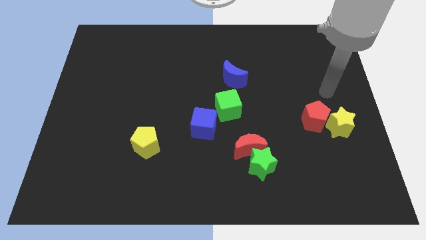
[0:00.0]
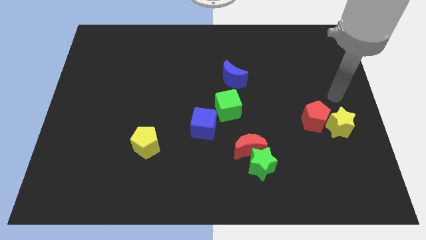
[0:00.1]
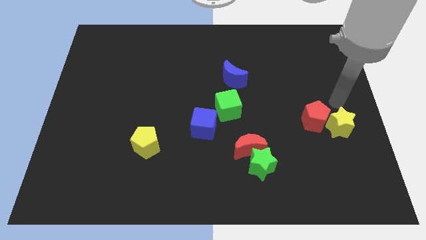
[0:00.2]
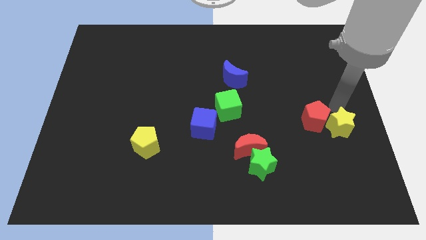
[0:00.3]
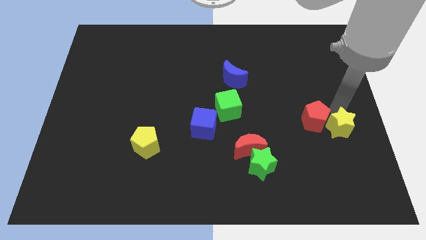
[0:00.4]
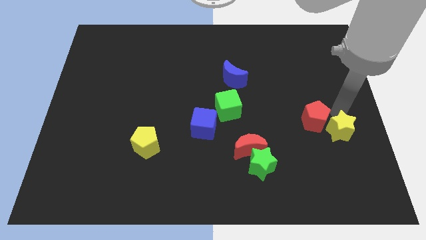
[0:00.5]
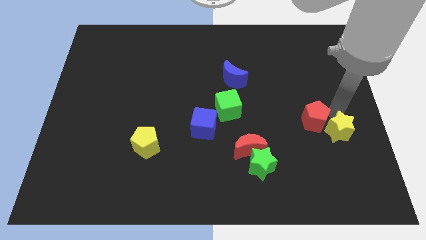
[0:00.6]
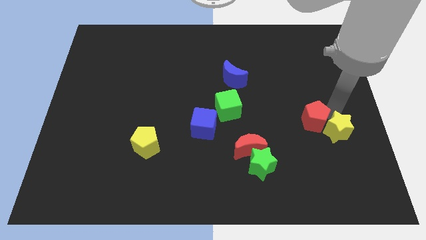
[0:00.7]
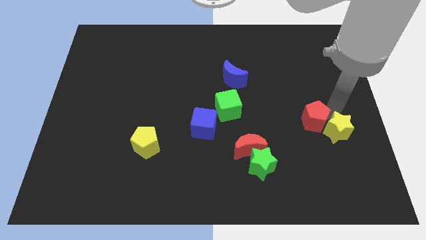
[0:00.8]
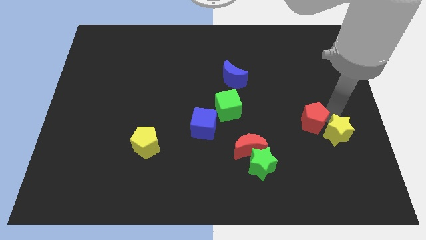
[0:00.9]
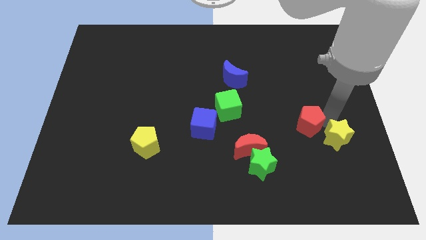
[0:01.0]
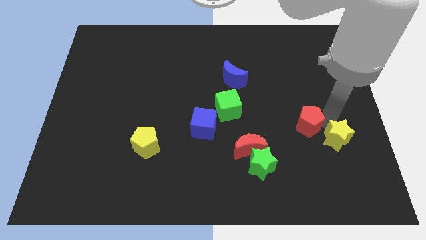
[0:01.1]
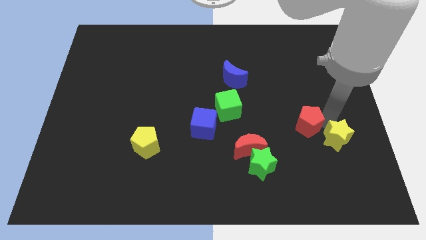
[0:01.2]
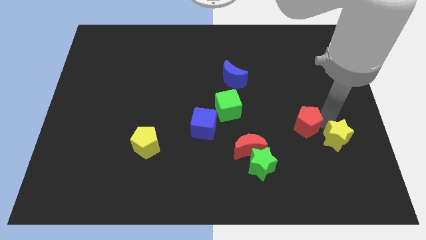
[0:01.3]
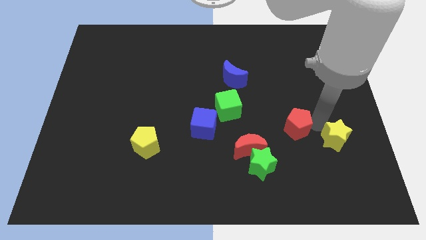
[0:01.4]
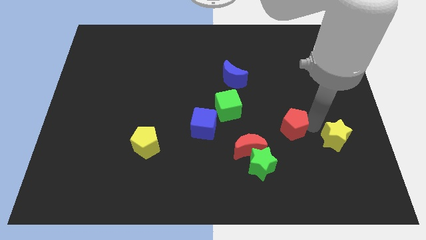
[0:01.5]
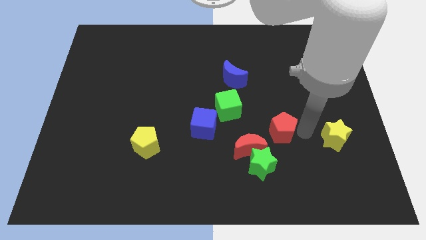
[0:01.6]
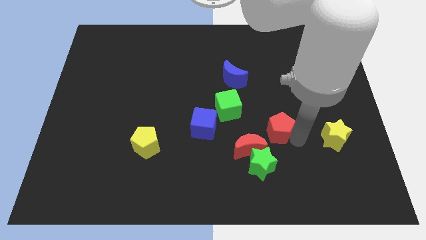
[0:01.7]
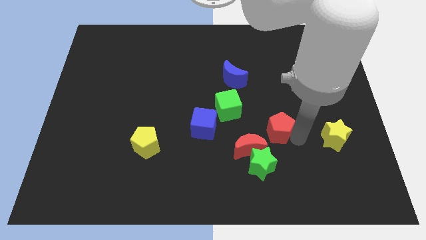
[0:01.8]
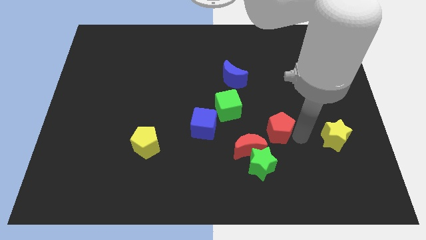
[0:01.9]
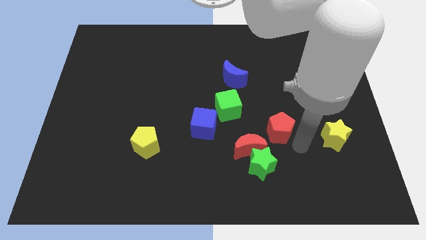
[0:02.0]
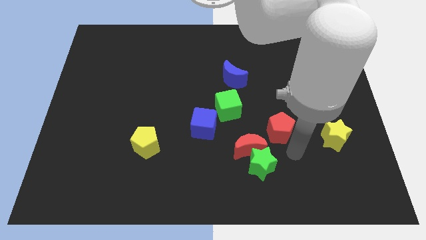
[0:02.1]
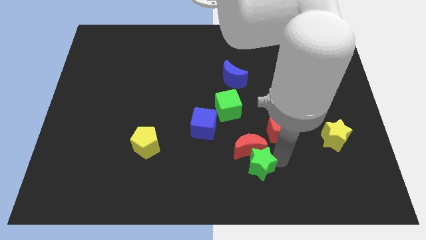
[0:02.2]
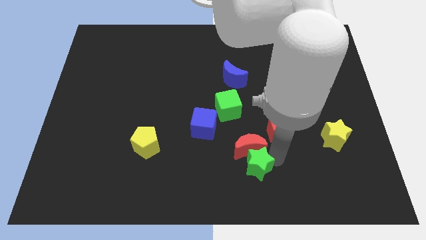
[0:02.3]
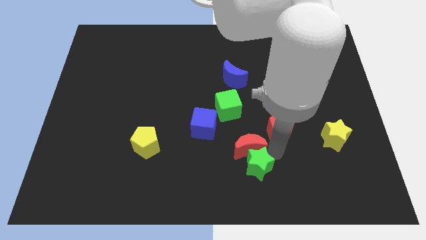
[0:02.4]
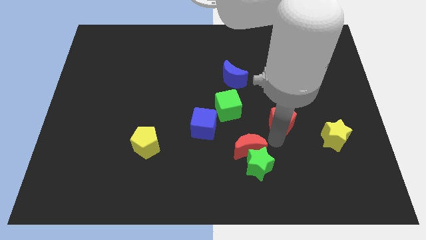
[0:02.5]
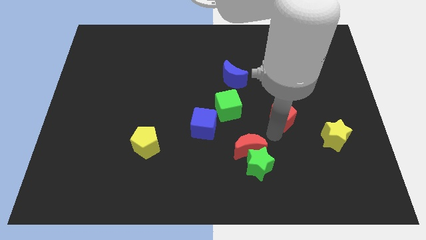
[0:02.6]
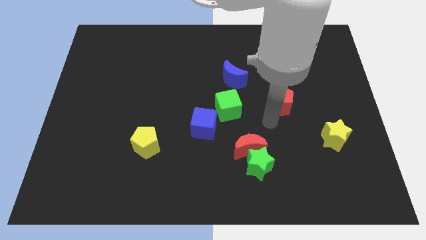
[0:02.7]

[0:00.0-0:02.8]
separate red pentagon from the yellow star

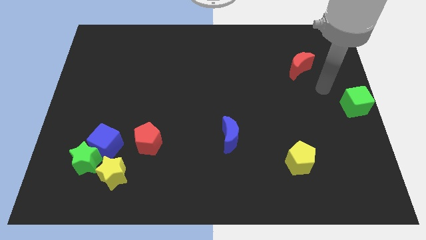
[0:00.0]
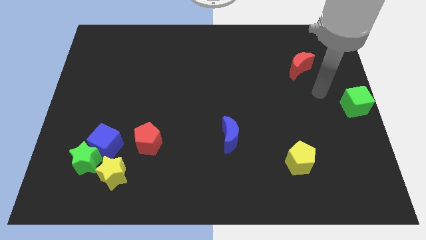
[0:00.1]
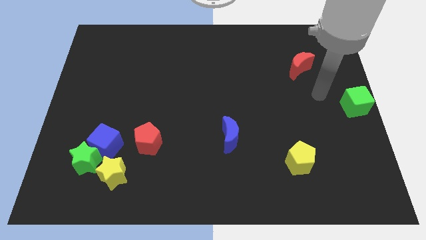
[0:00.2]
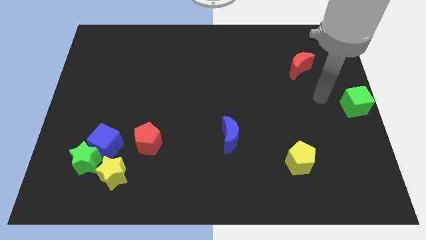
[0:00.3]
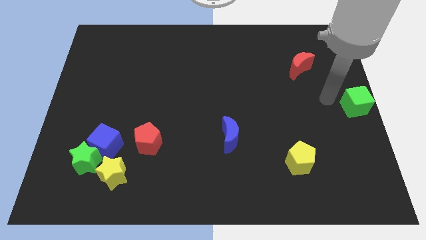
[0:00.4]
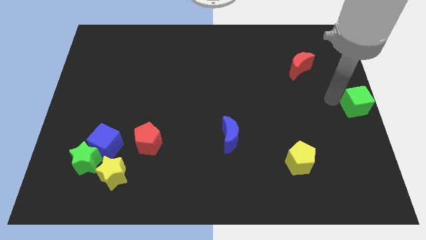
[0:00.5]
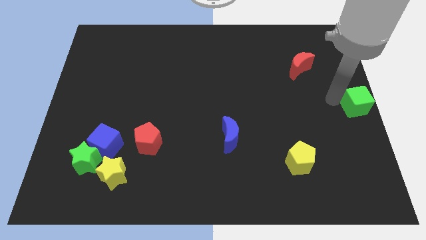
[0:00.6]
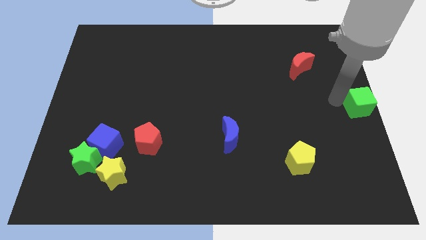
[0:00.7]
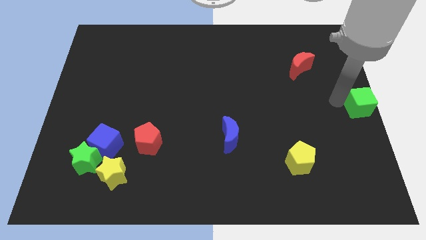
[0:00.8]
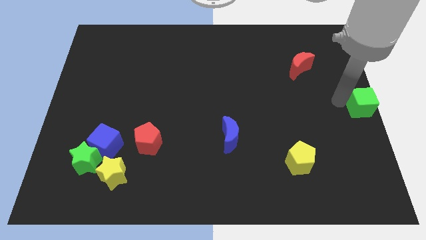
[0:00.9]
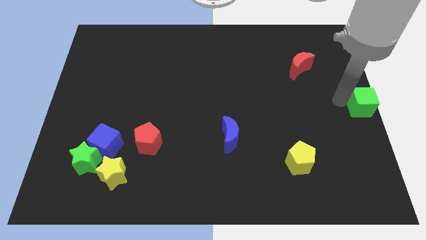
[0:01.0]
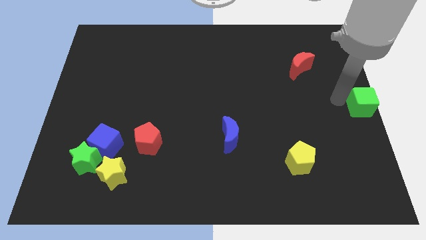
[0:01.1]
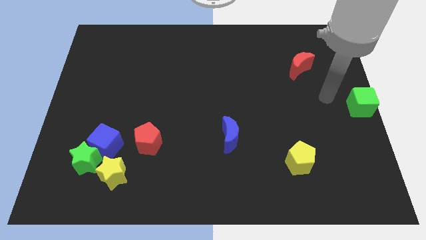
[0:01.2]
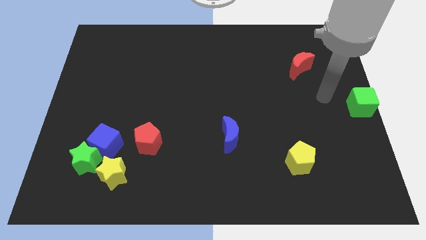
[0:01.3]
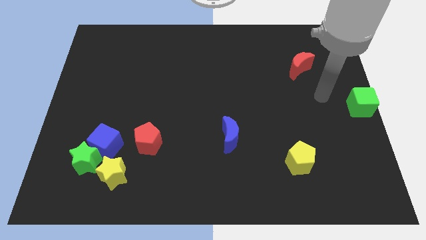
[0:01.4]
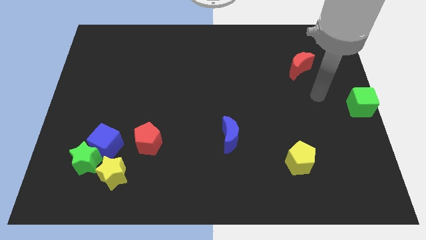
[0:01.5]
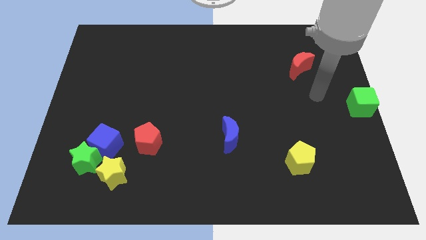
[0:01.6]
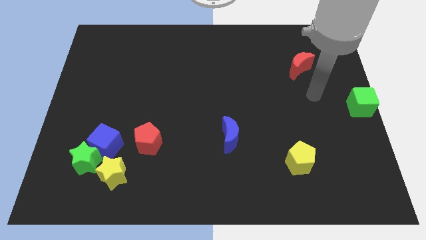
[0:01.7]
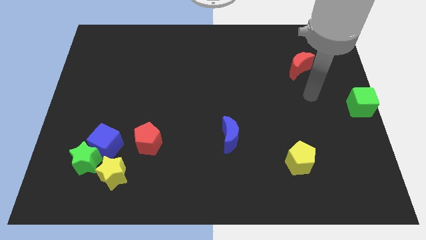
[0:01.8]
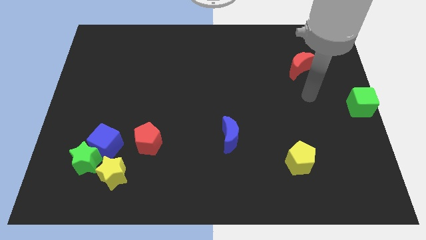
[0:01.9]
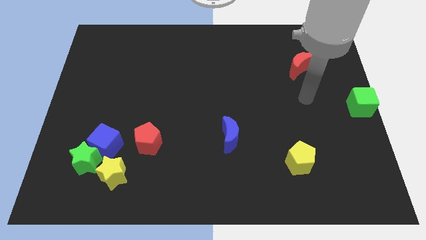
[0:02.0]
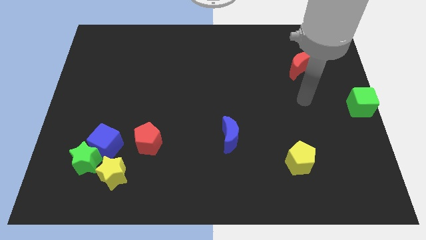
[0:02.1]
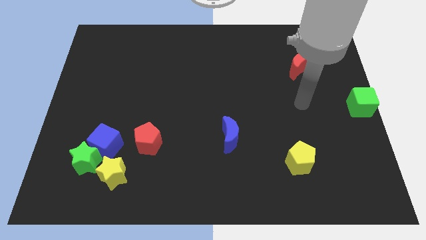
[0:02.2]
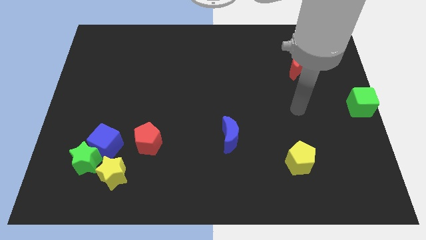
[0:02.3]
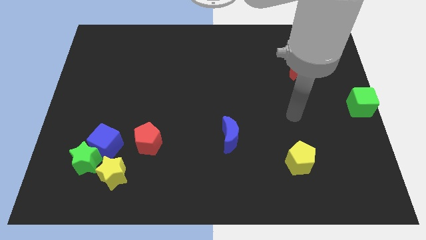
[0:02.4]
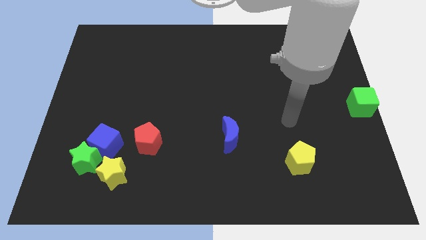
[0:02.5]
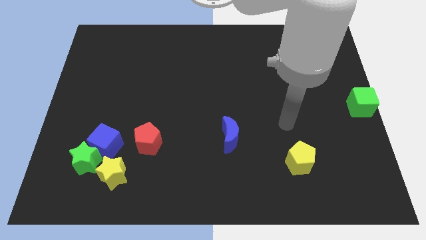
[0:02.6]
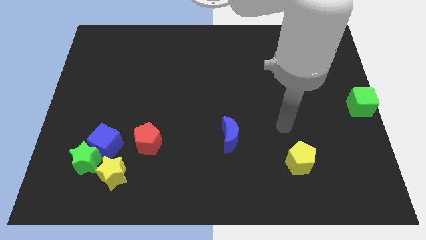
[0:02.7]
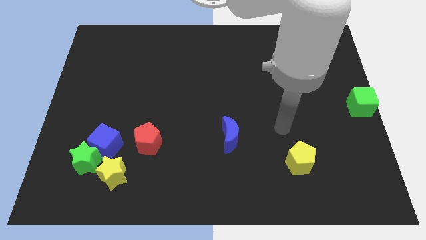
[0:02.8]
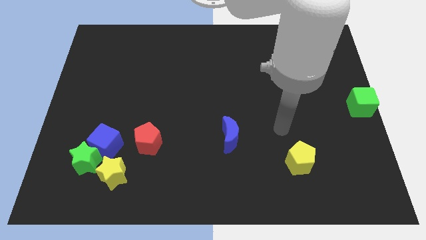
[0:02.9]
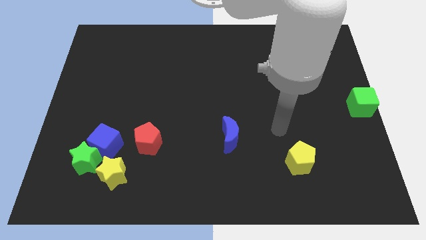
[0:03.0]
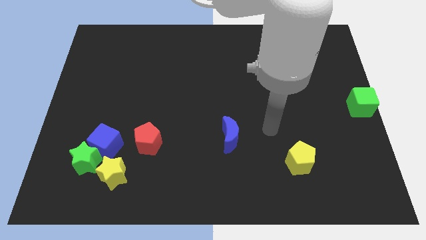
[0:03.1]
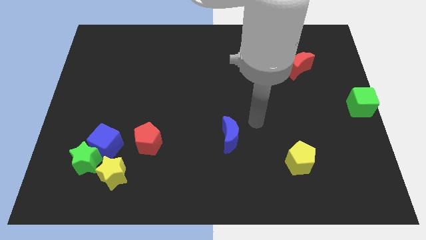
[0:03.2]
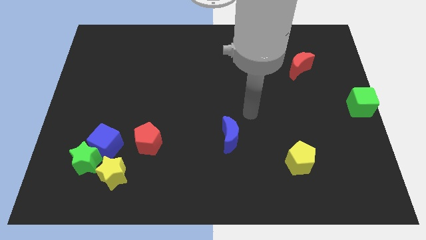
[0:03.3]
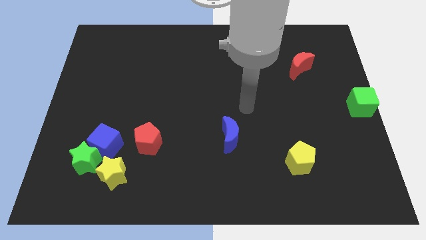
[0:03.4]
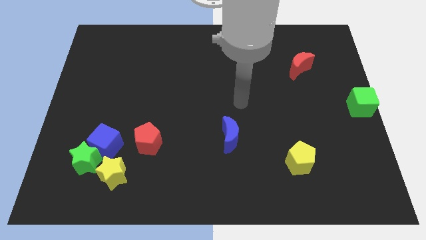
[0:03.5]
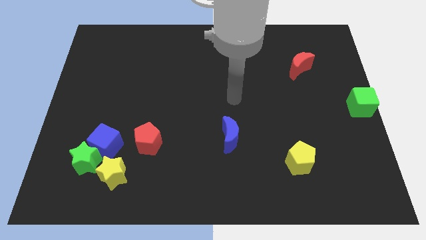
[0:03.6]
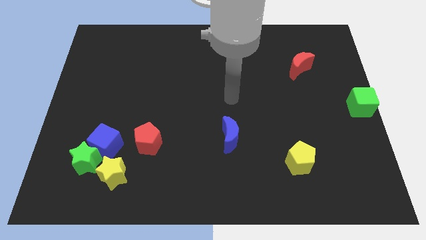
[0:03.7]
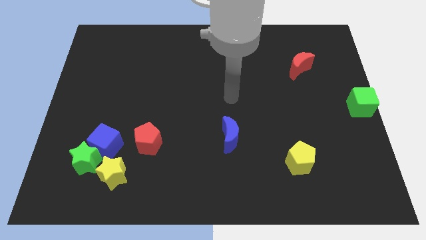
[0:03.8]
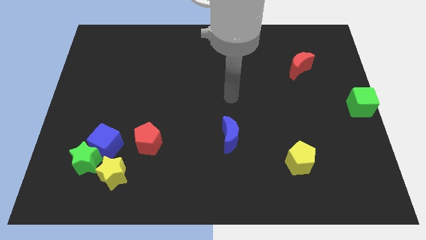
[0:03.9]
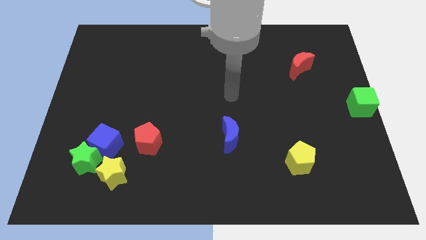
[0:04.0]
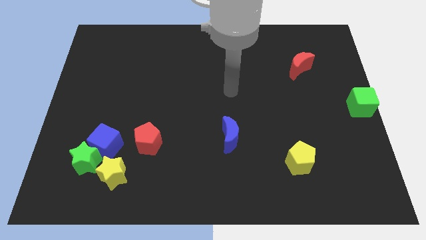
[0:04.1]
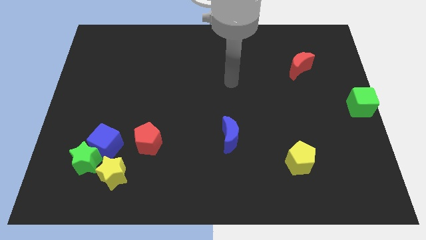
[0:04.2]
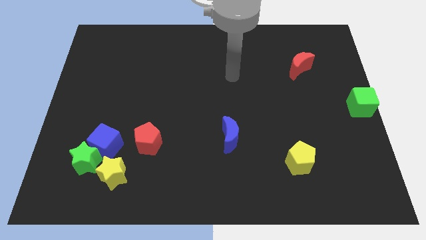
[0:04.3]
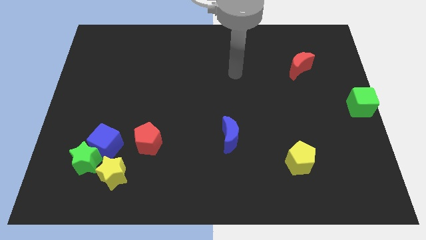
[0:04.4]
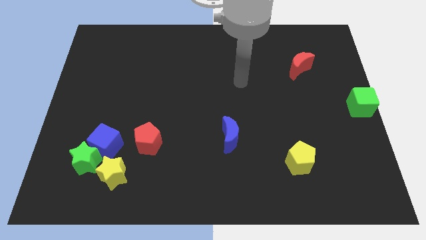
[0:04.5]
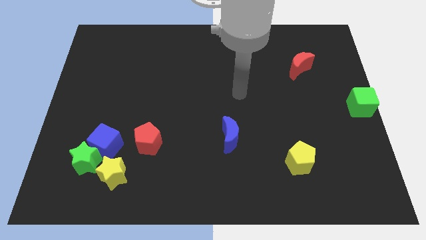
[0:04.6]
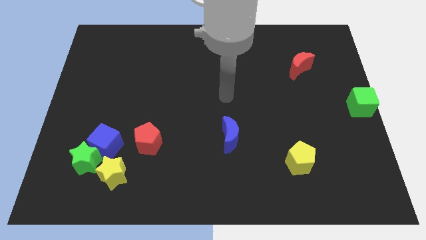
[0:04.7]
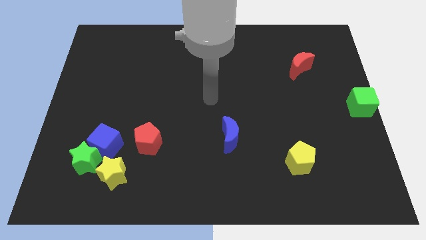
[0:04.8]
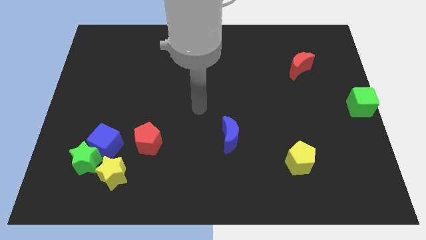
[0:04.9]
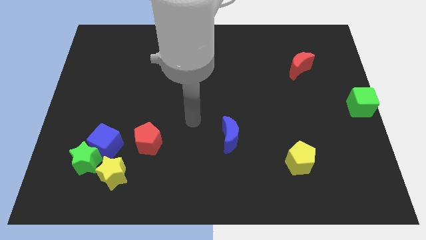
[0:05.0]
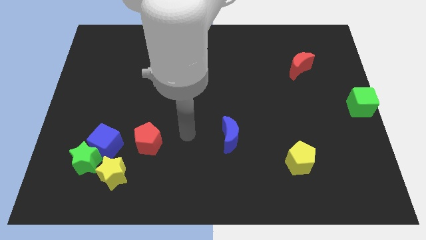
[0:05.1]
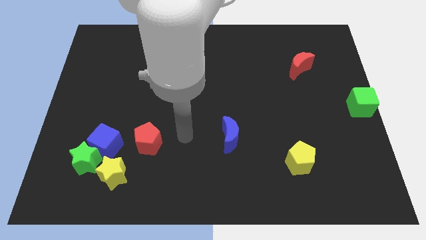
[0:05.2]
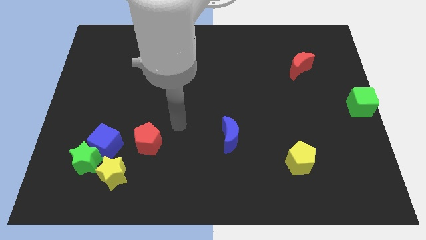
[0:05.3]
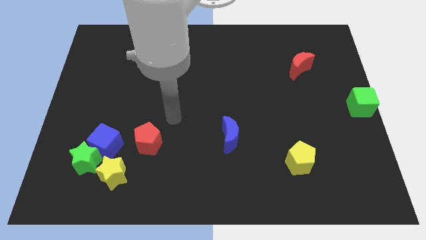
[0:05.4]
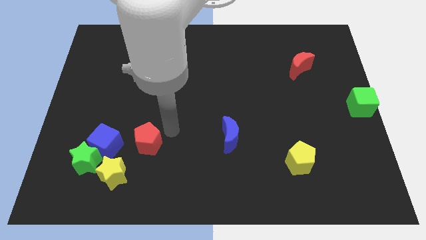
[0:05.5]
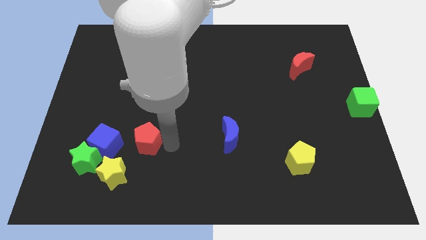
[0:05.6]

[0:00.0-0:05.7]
move your arm away from the green cube

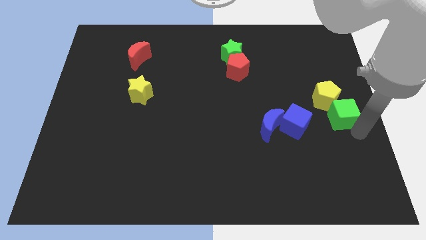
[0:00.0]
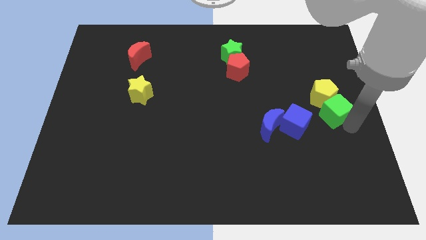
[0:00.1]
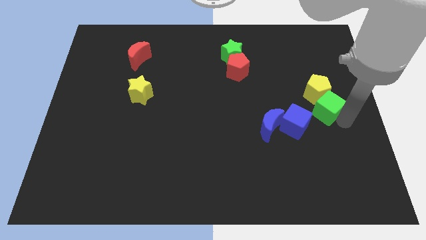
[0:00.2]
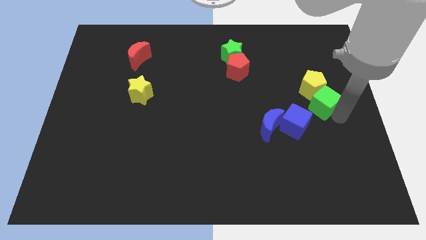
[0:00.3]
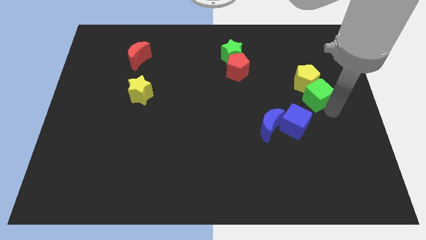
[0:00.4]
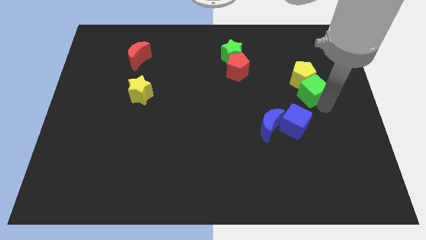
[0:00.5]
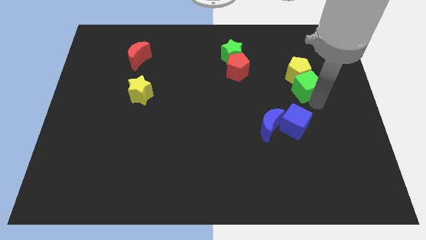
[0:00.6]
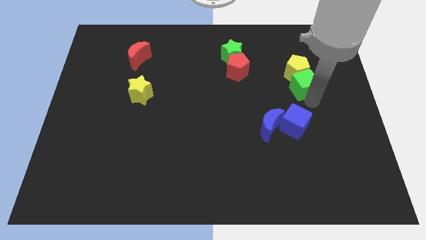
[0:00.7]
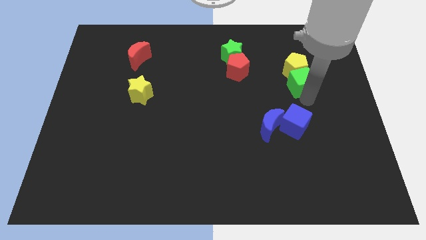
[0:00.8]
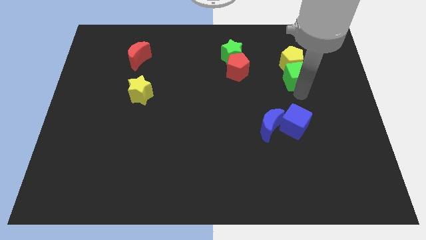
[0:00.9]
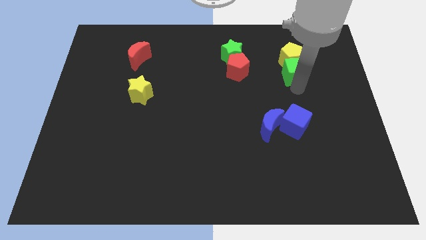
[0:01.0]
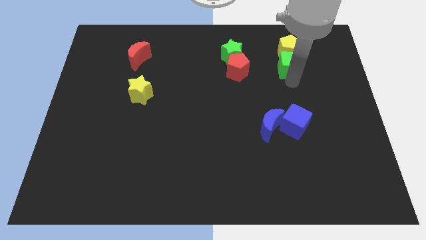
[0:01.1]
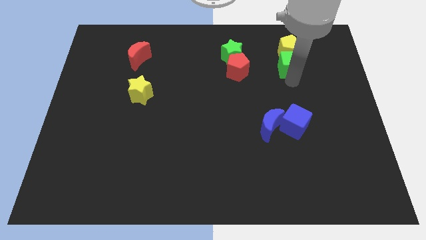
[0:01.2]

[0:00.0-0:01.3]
push both the green cube and yellow pentagon to the top of the board
